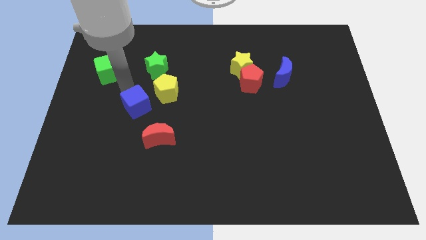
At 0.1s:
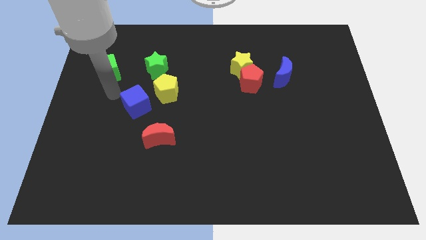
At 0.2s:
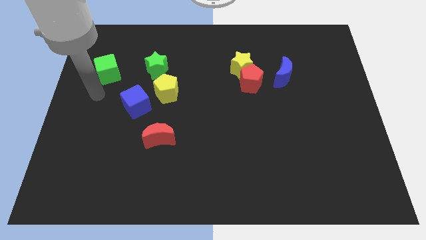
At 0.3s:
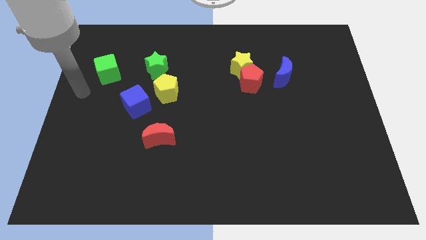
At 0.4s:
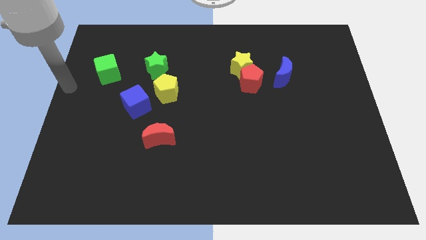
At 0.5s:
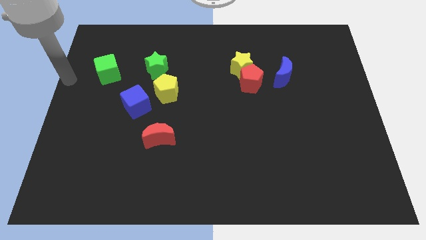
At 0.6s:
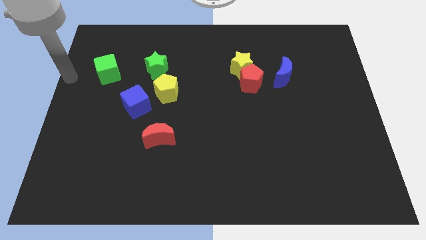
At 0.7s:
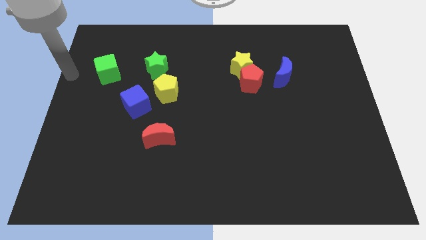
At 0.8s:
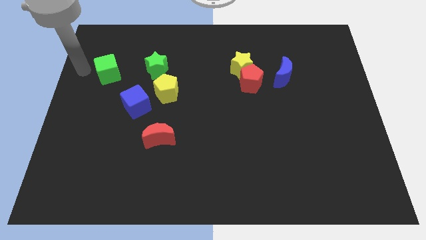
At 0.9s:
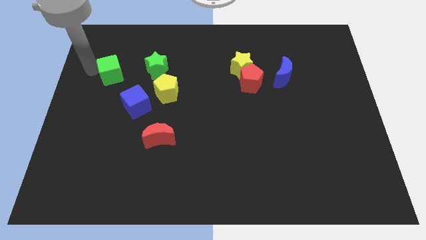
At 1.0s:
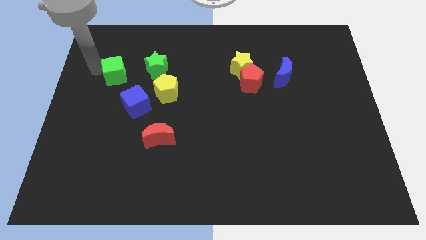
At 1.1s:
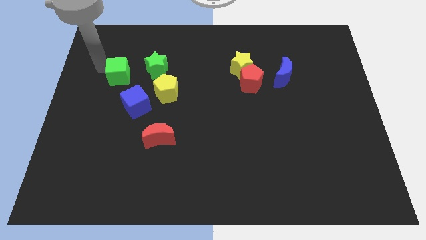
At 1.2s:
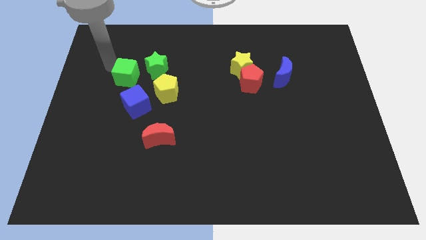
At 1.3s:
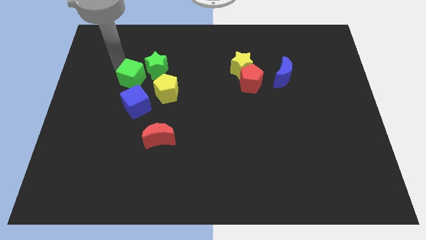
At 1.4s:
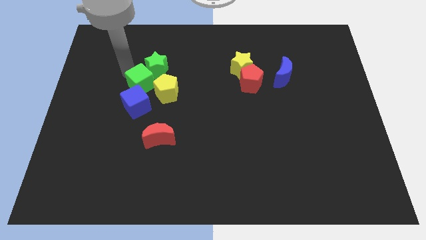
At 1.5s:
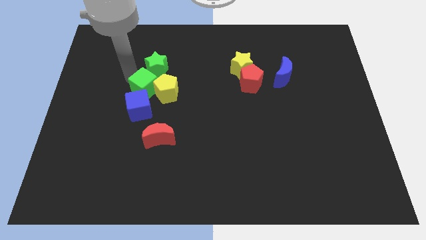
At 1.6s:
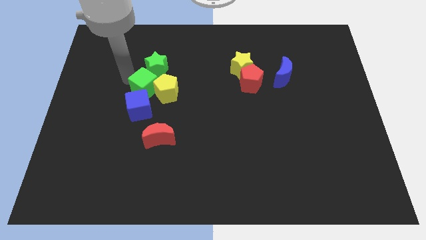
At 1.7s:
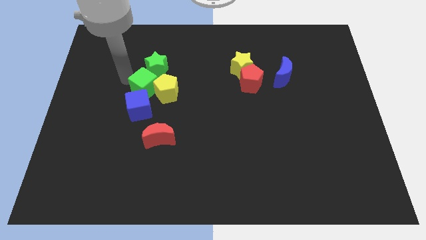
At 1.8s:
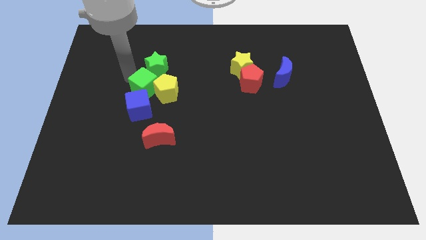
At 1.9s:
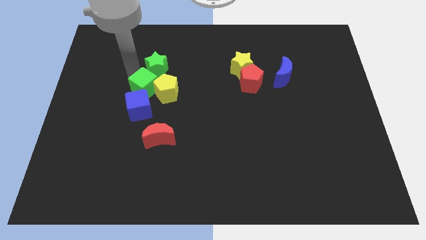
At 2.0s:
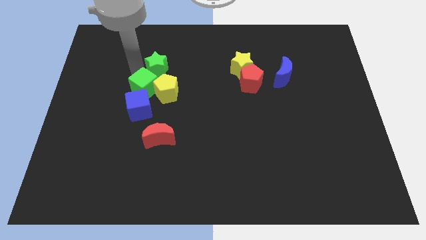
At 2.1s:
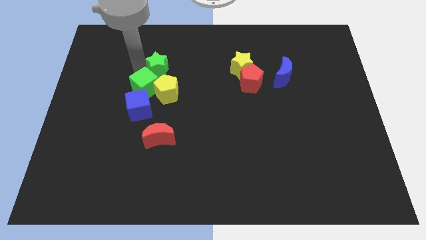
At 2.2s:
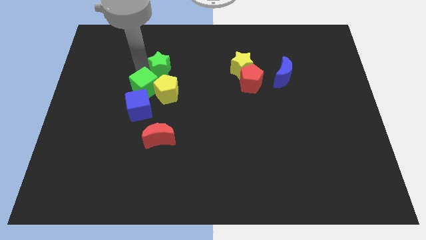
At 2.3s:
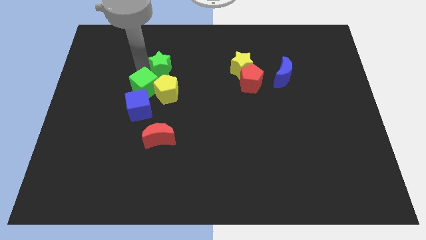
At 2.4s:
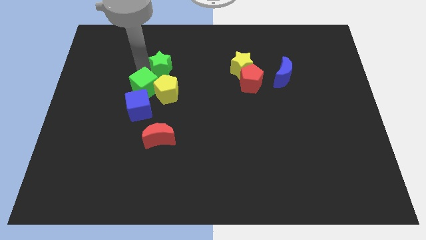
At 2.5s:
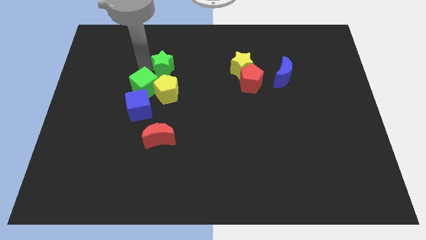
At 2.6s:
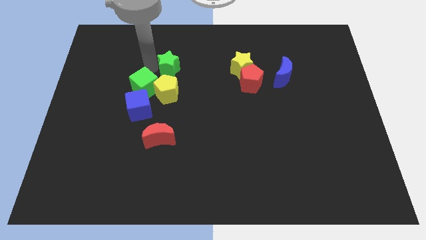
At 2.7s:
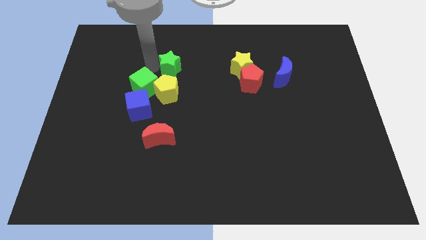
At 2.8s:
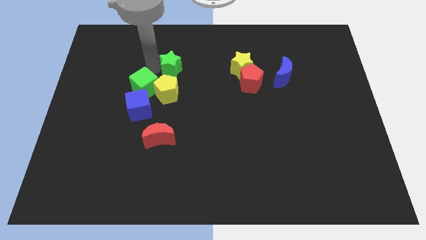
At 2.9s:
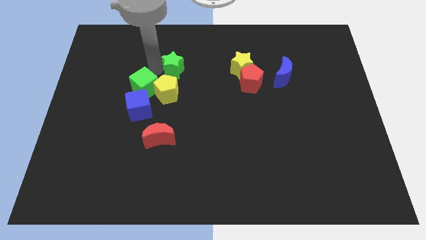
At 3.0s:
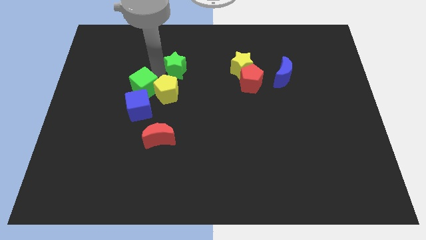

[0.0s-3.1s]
push the green cube into the blue cube and the yellow pentagon

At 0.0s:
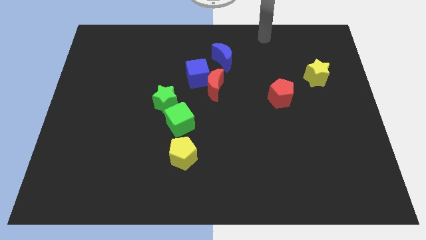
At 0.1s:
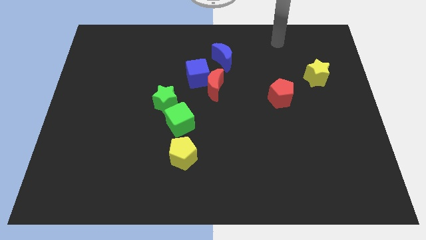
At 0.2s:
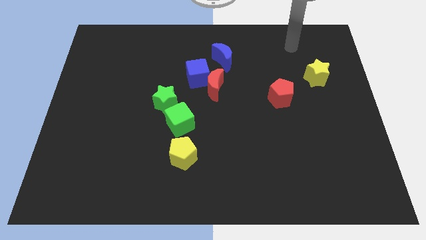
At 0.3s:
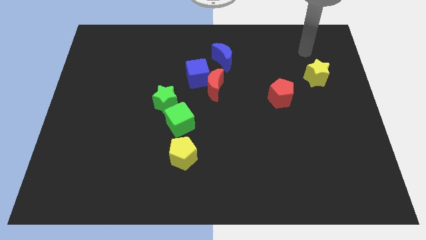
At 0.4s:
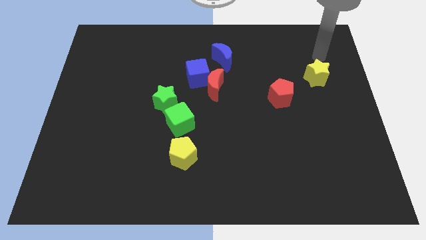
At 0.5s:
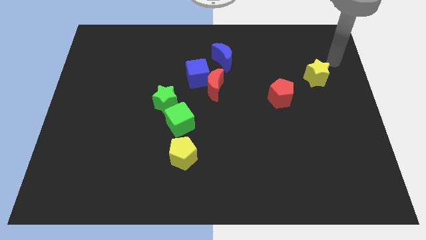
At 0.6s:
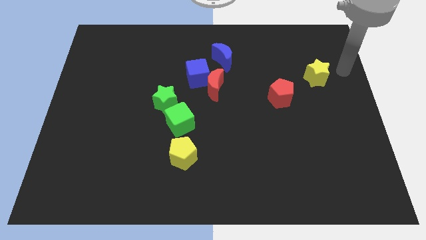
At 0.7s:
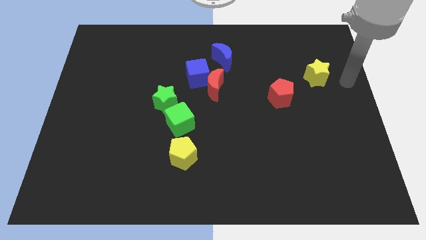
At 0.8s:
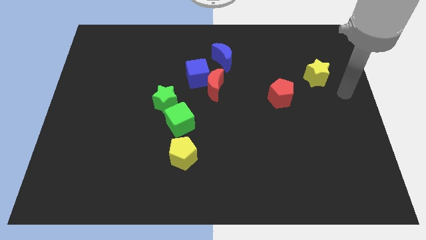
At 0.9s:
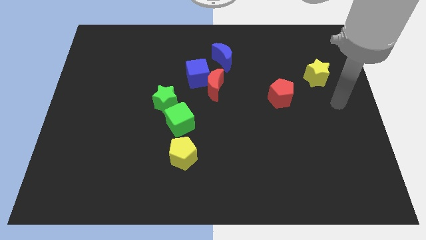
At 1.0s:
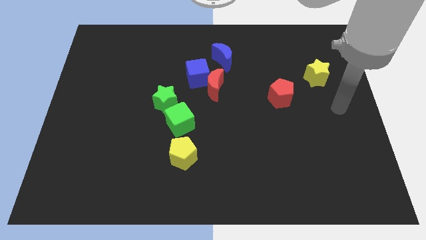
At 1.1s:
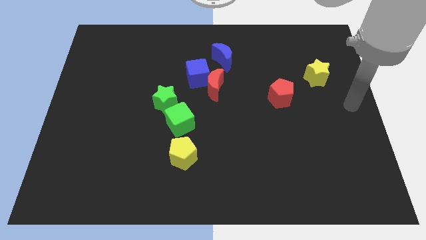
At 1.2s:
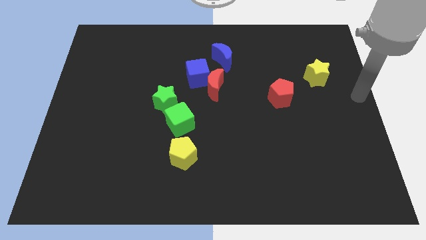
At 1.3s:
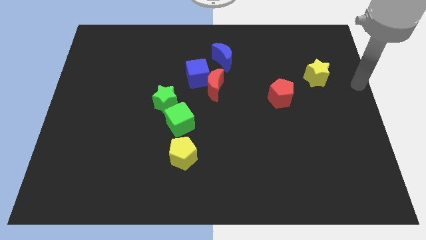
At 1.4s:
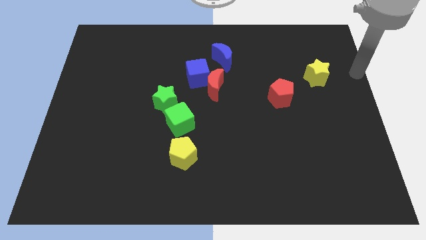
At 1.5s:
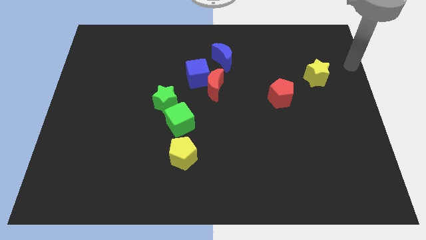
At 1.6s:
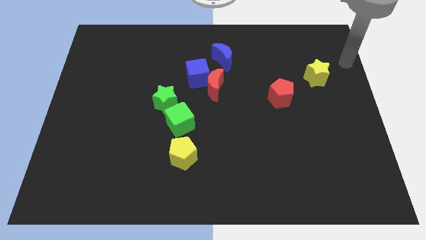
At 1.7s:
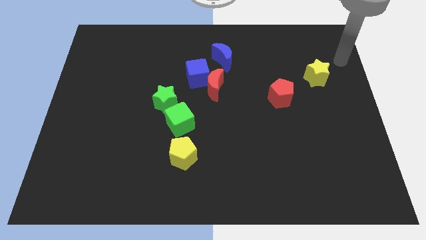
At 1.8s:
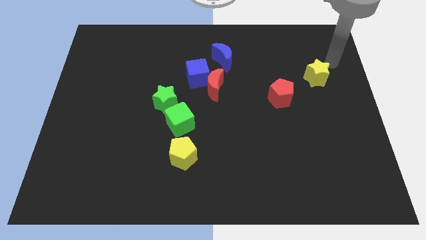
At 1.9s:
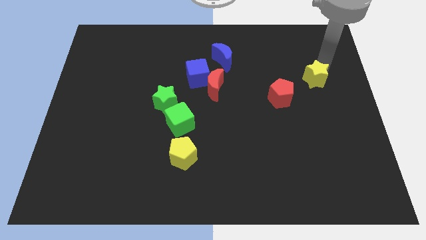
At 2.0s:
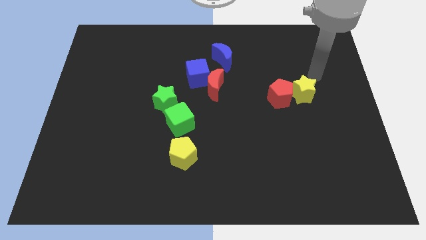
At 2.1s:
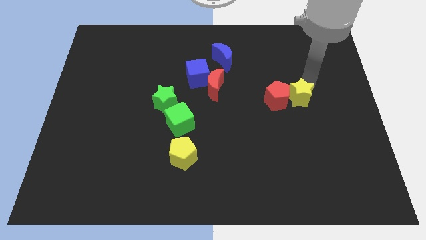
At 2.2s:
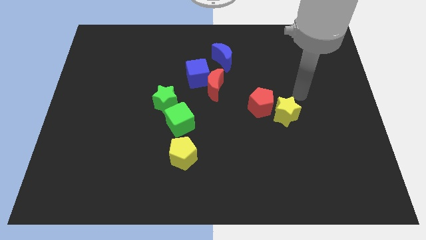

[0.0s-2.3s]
push red pentagon with yellow star

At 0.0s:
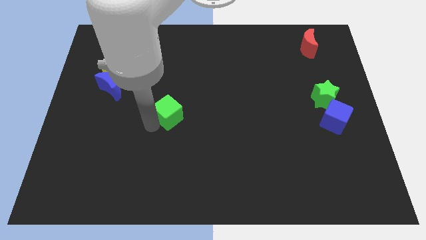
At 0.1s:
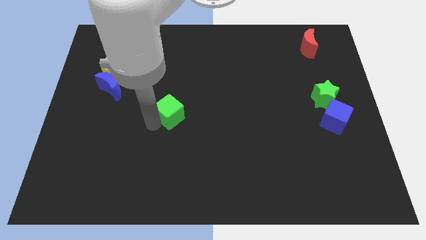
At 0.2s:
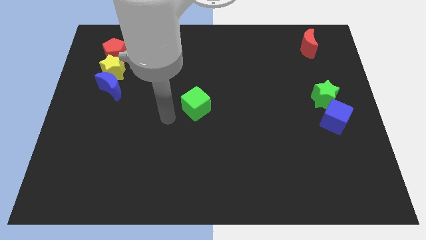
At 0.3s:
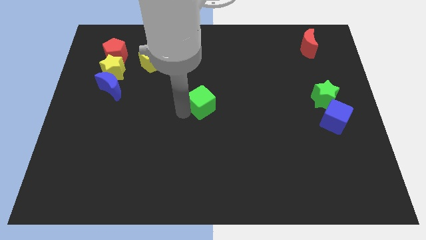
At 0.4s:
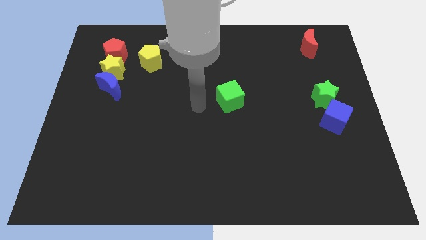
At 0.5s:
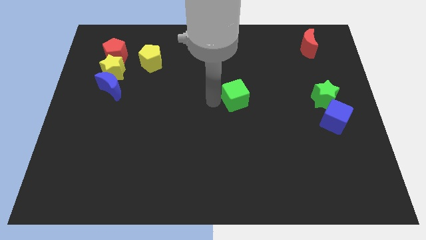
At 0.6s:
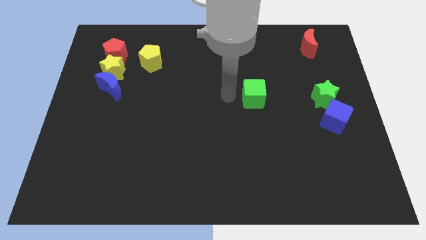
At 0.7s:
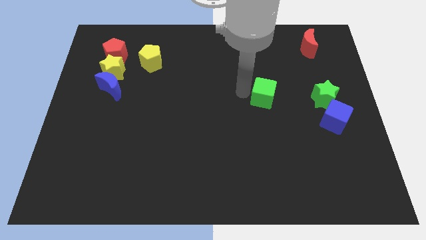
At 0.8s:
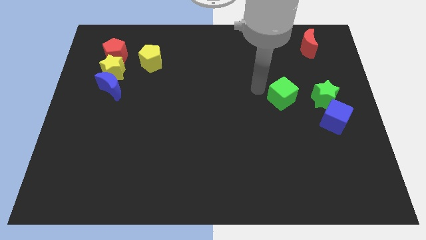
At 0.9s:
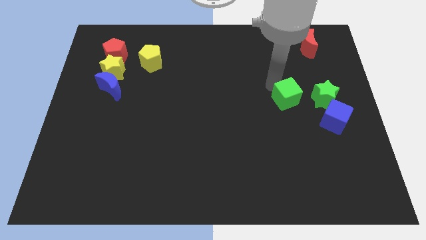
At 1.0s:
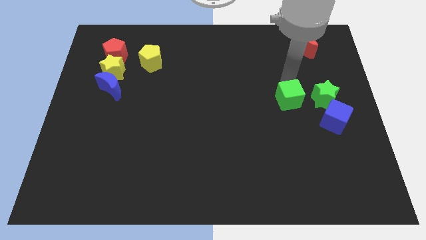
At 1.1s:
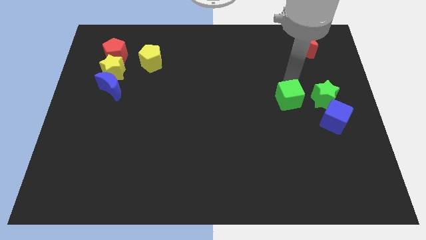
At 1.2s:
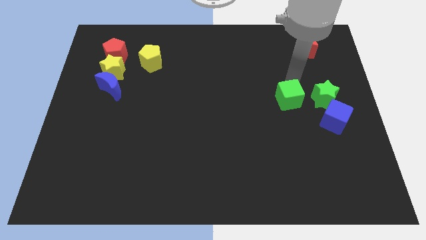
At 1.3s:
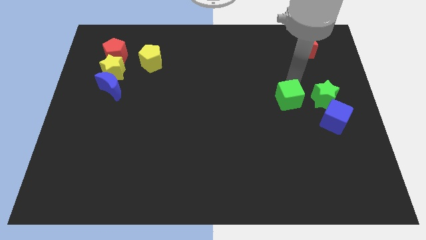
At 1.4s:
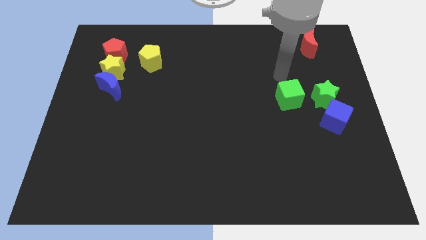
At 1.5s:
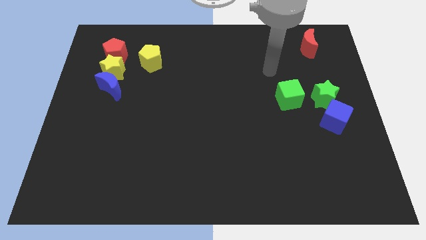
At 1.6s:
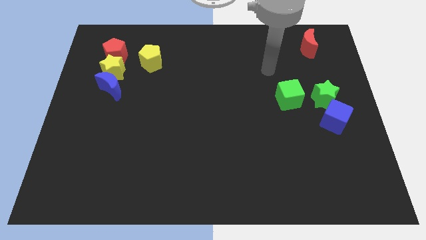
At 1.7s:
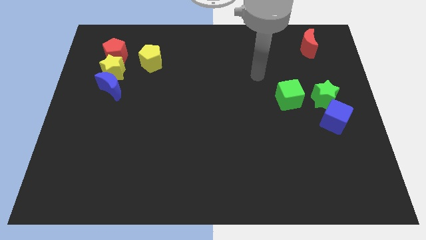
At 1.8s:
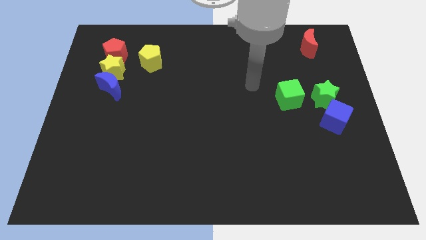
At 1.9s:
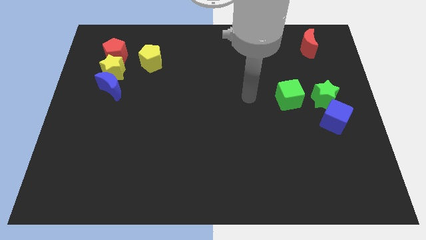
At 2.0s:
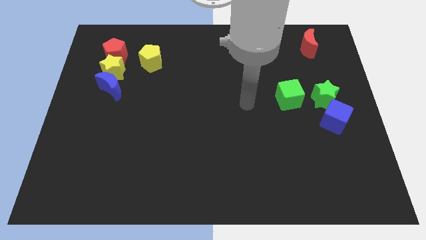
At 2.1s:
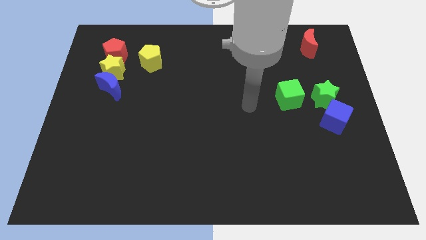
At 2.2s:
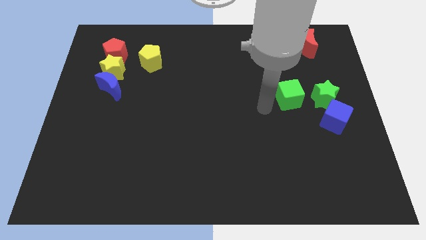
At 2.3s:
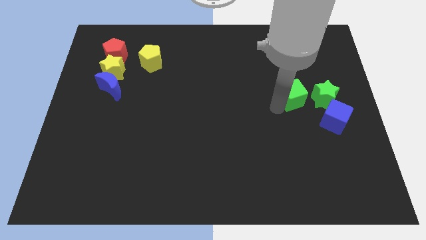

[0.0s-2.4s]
move green cube diagonal to the left of green star

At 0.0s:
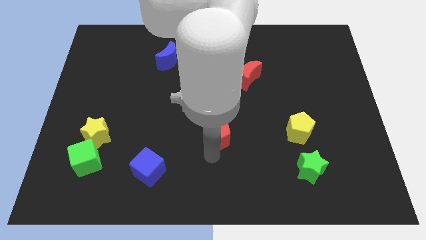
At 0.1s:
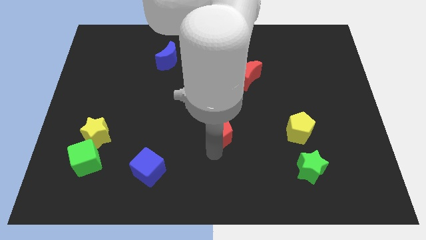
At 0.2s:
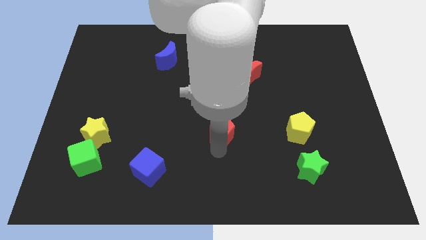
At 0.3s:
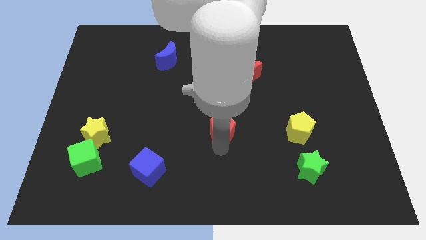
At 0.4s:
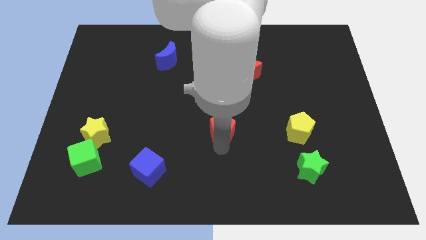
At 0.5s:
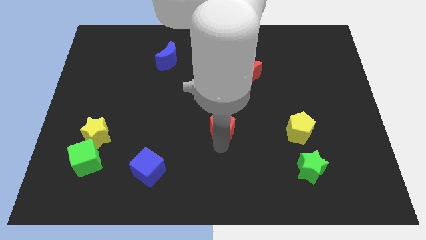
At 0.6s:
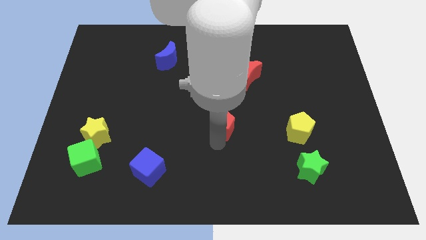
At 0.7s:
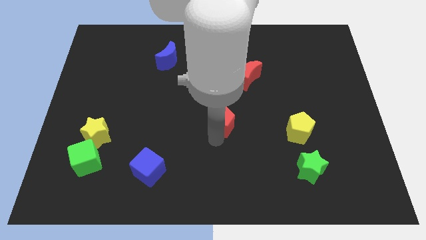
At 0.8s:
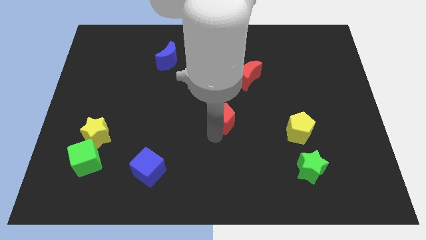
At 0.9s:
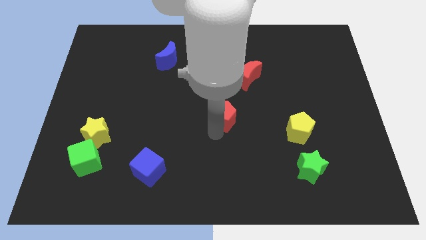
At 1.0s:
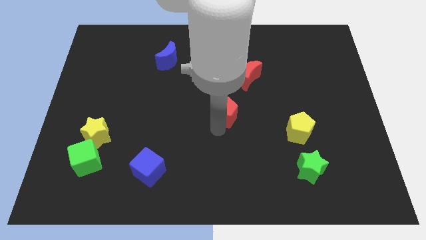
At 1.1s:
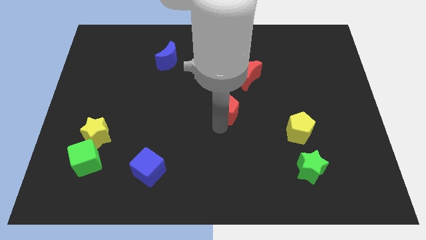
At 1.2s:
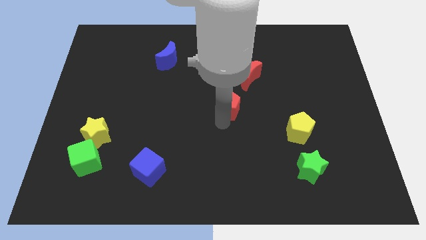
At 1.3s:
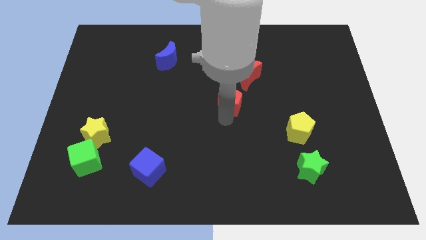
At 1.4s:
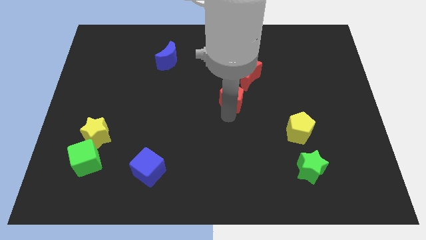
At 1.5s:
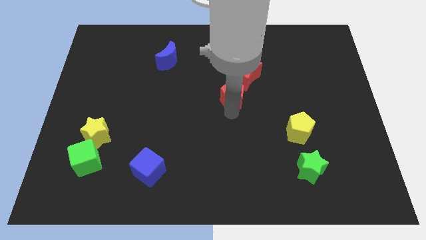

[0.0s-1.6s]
move the red pentagon to the bottom left side of the red moon
